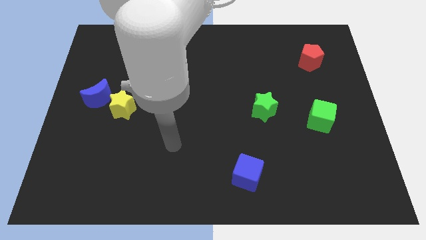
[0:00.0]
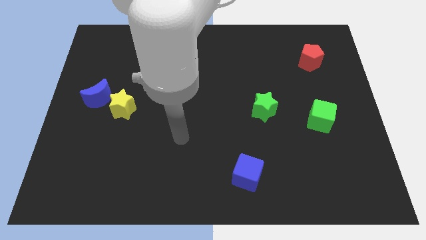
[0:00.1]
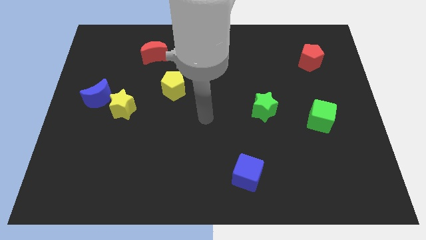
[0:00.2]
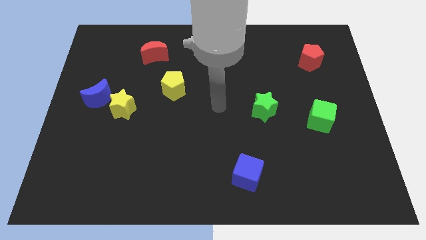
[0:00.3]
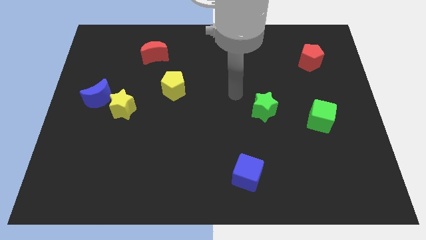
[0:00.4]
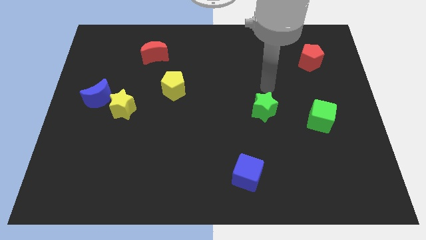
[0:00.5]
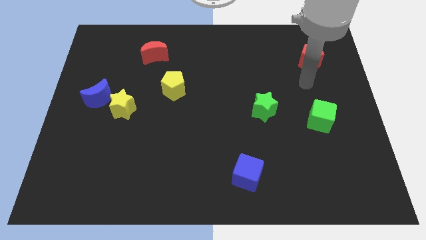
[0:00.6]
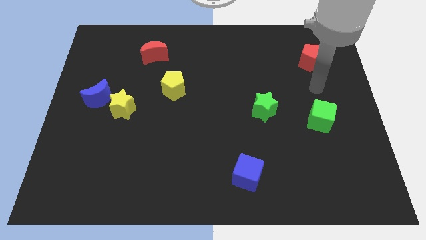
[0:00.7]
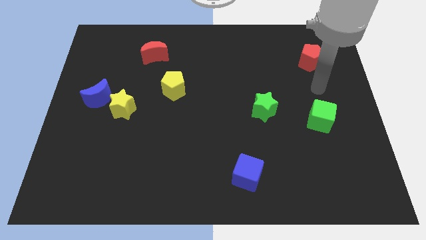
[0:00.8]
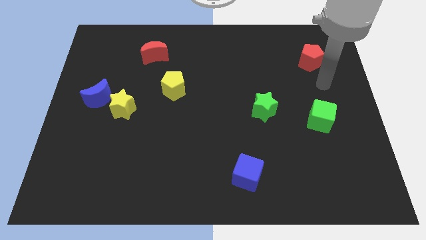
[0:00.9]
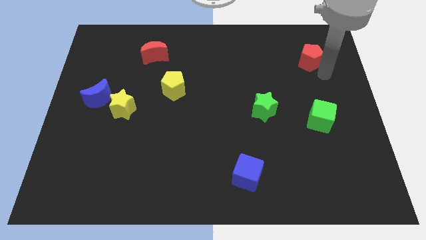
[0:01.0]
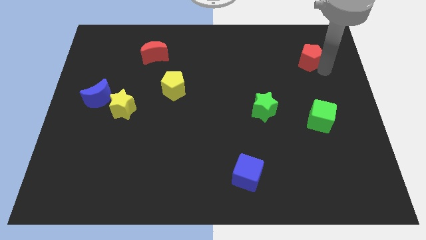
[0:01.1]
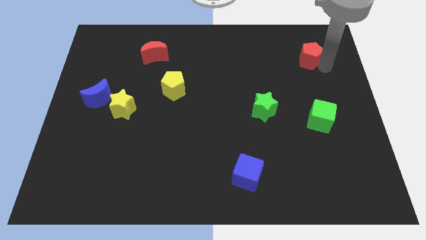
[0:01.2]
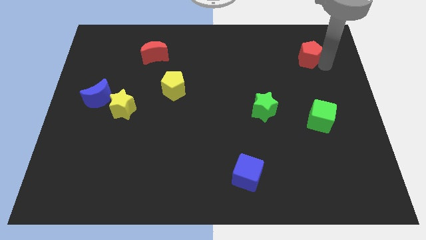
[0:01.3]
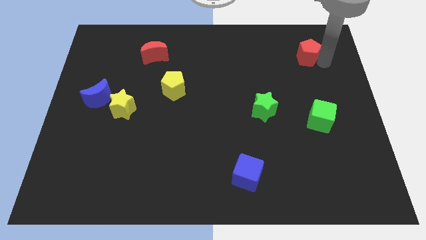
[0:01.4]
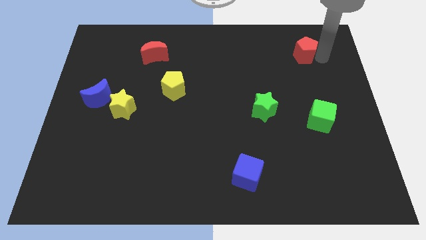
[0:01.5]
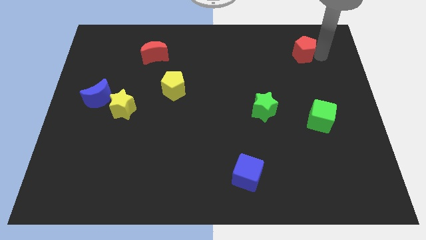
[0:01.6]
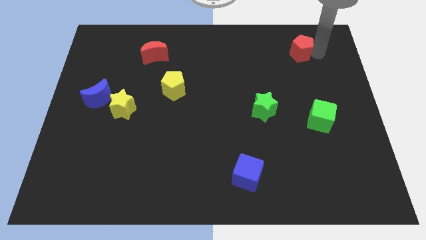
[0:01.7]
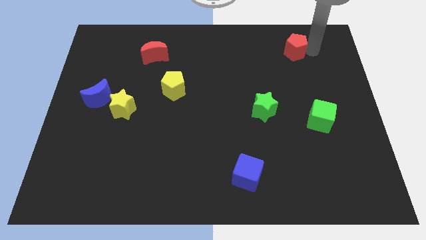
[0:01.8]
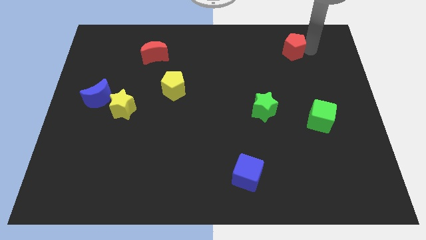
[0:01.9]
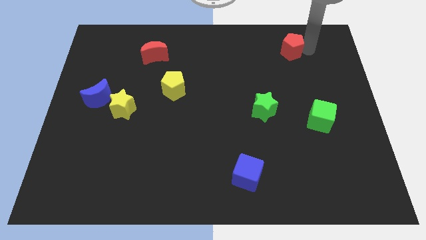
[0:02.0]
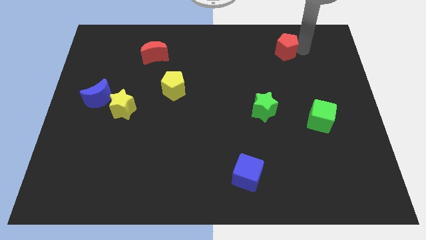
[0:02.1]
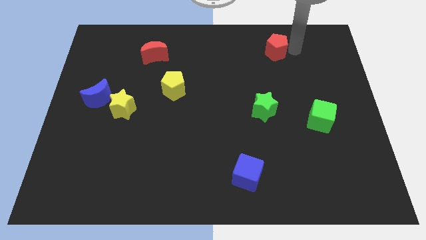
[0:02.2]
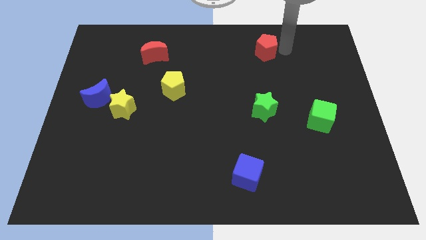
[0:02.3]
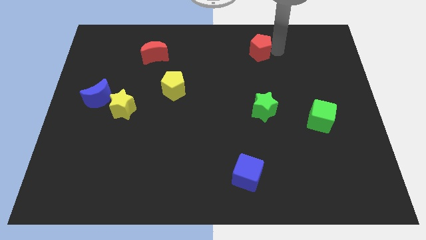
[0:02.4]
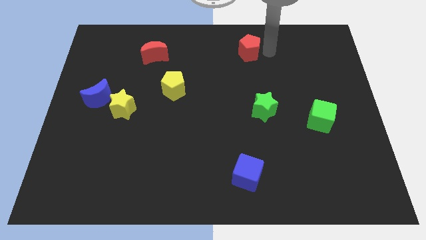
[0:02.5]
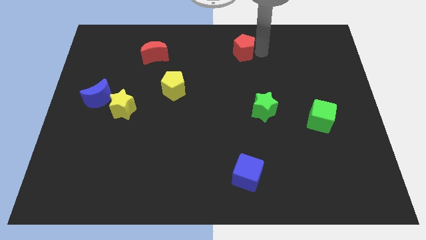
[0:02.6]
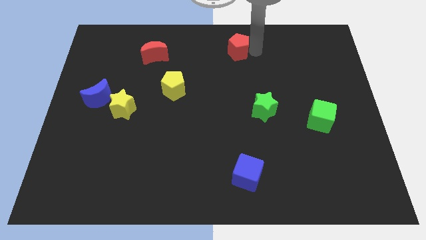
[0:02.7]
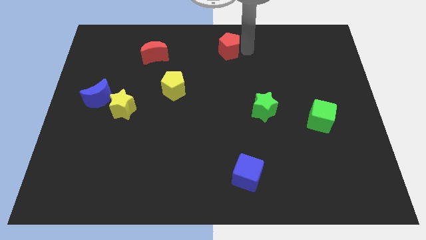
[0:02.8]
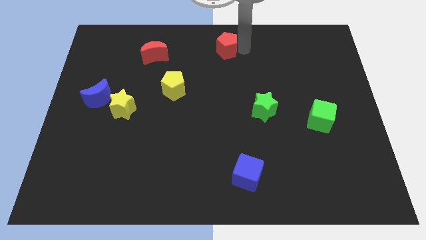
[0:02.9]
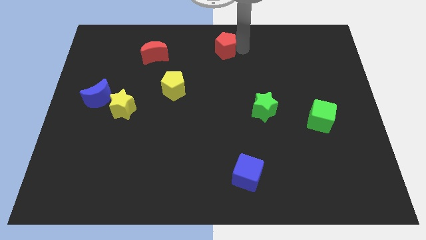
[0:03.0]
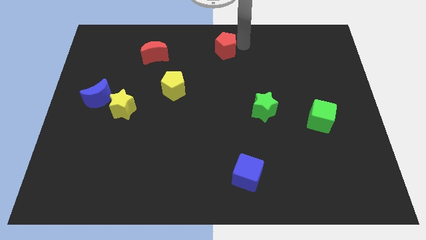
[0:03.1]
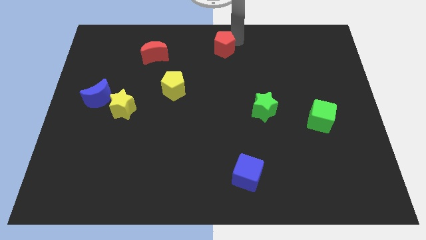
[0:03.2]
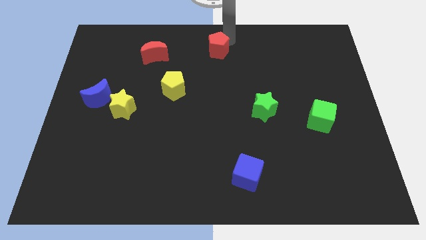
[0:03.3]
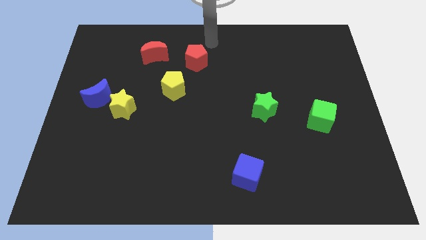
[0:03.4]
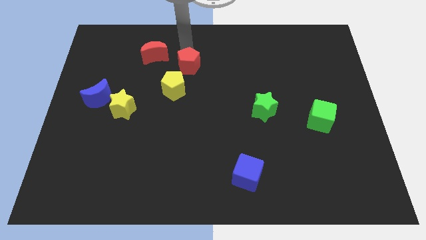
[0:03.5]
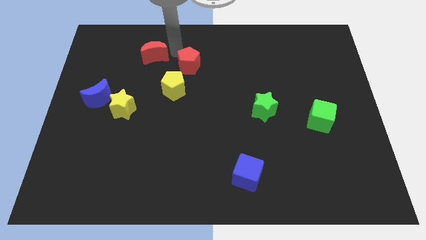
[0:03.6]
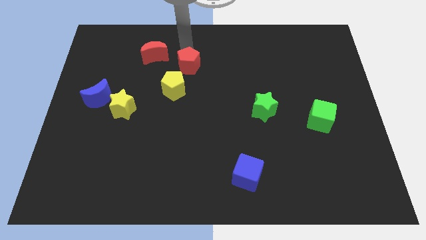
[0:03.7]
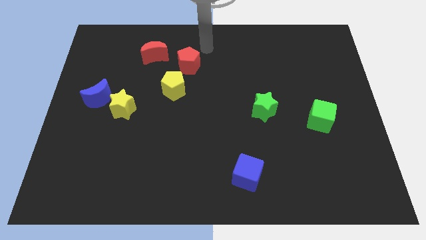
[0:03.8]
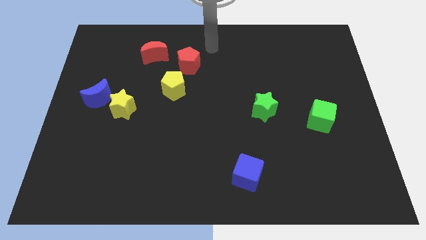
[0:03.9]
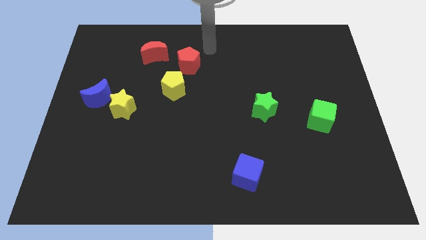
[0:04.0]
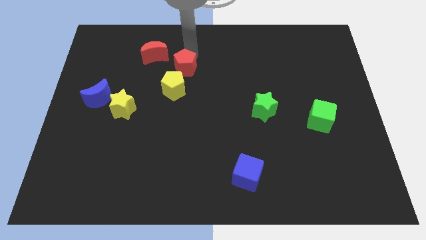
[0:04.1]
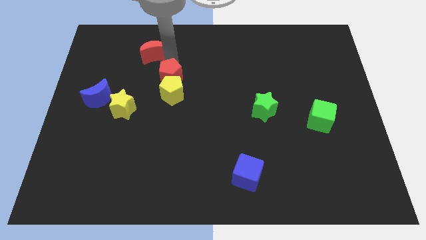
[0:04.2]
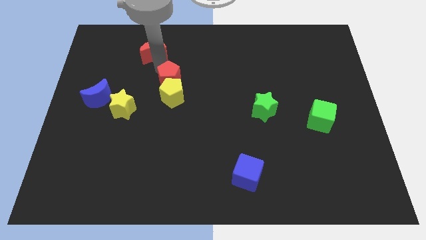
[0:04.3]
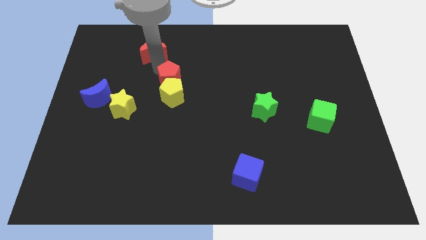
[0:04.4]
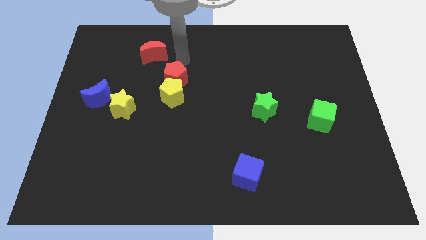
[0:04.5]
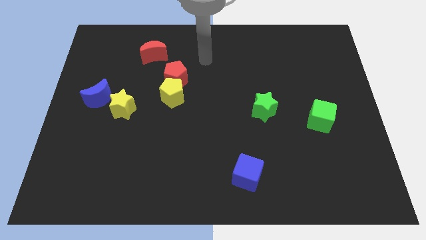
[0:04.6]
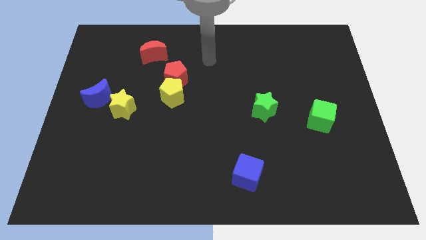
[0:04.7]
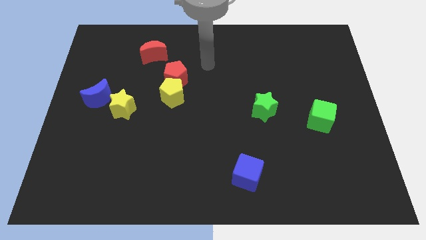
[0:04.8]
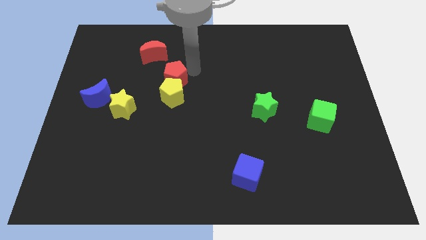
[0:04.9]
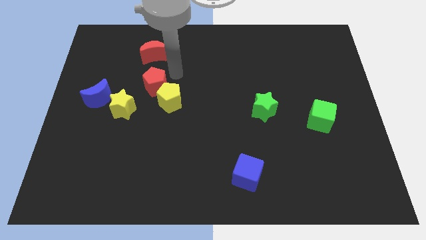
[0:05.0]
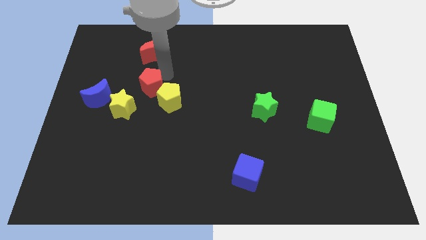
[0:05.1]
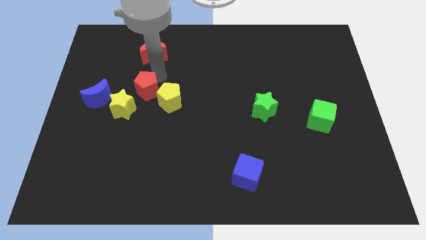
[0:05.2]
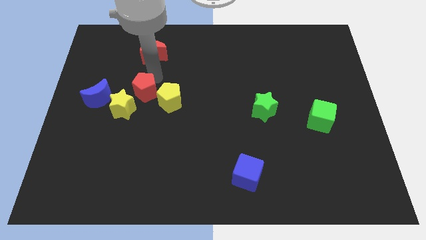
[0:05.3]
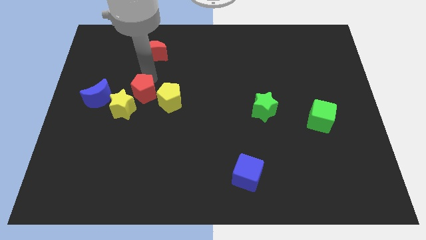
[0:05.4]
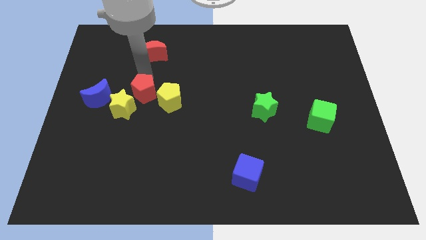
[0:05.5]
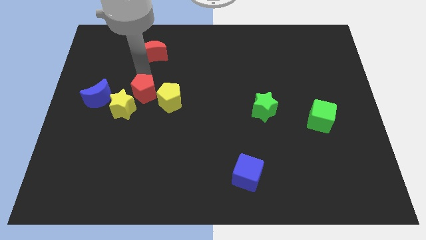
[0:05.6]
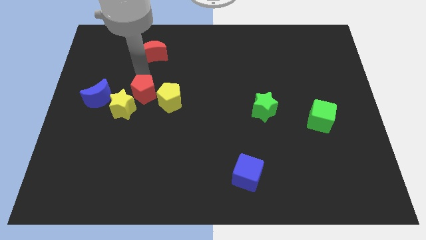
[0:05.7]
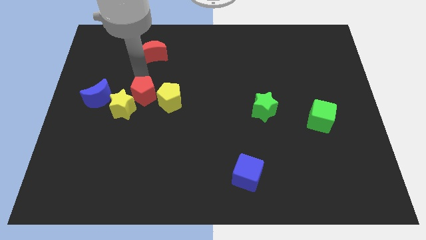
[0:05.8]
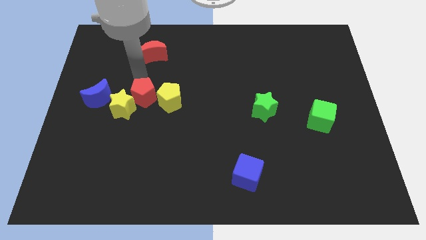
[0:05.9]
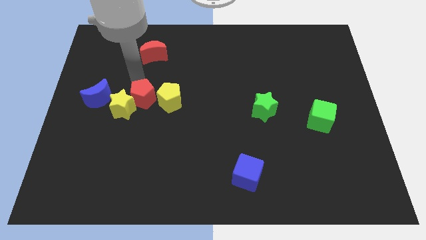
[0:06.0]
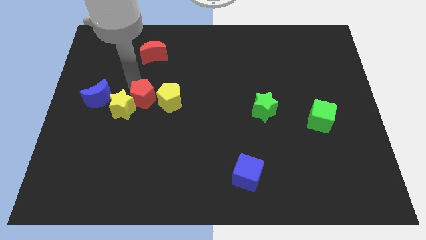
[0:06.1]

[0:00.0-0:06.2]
push the red pentagon next to the yellow star

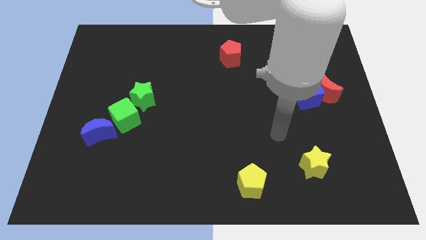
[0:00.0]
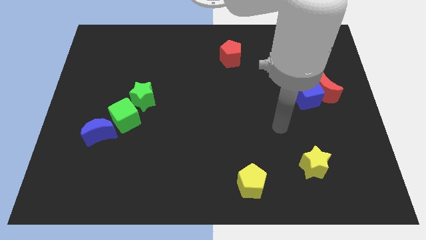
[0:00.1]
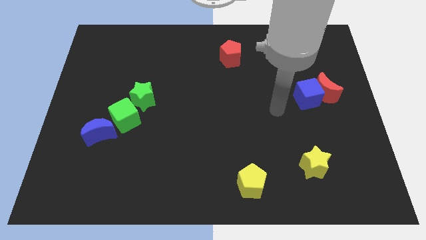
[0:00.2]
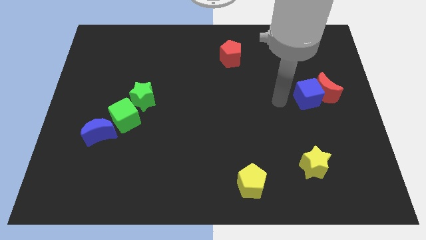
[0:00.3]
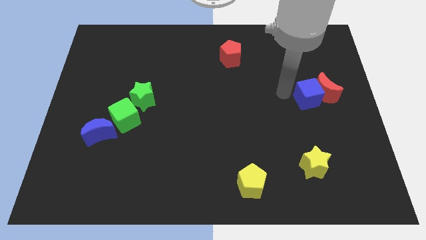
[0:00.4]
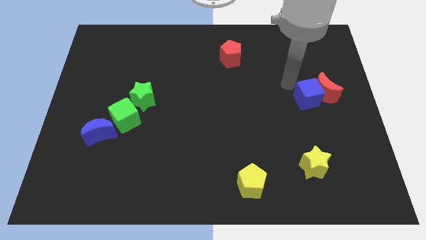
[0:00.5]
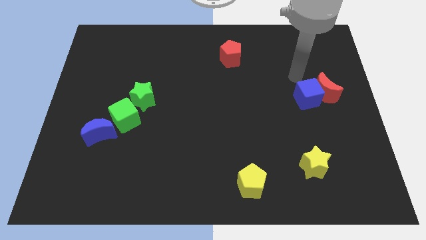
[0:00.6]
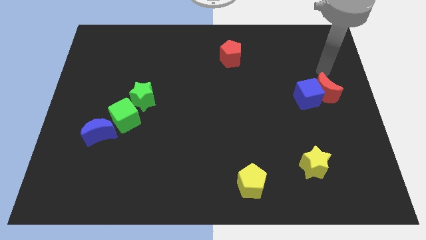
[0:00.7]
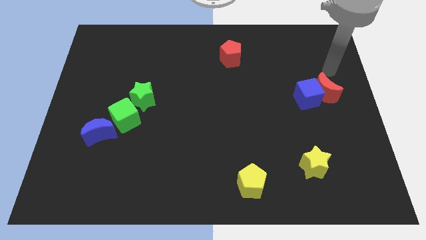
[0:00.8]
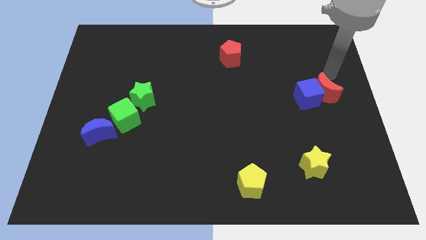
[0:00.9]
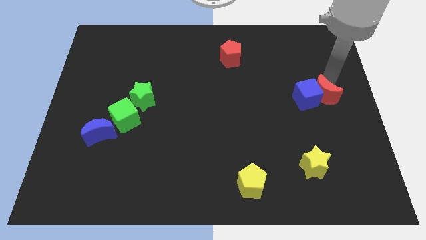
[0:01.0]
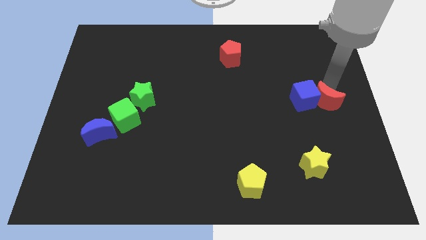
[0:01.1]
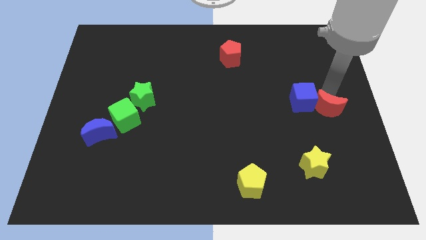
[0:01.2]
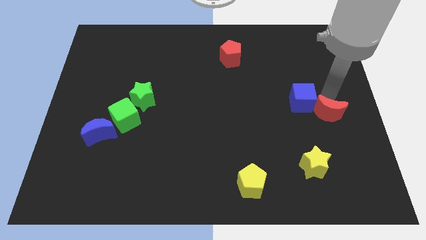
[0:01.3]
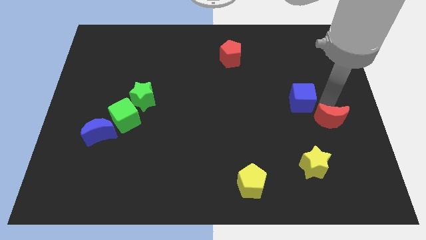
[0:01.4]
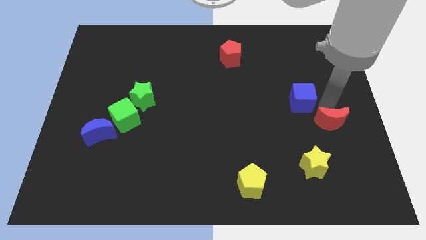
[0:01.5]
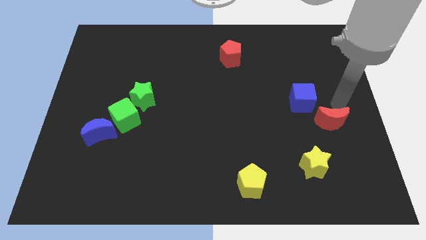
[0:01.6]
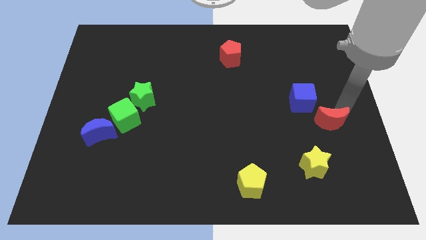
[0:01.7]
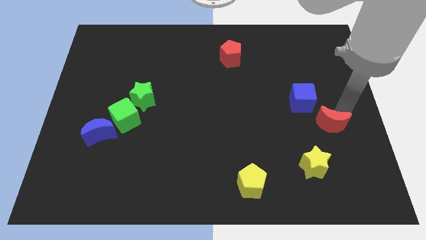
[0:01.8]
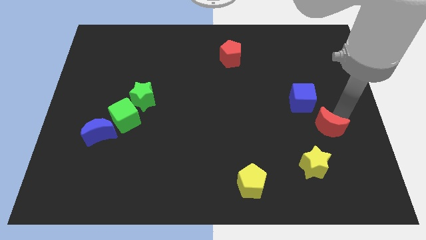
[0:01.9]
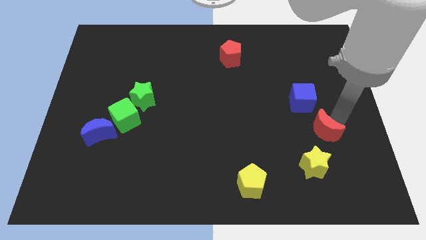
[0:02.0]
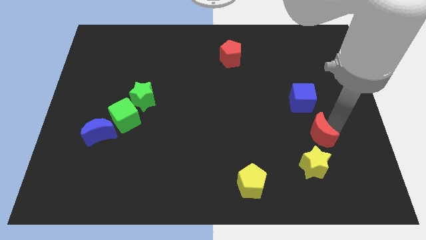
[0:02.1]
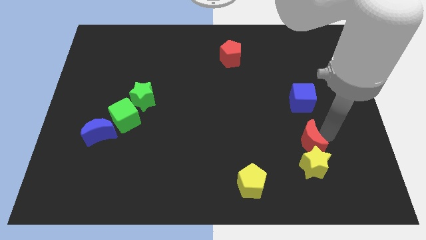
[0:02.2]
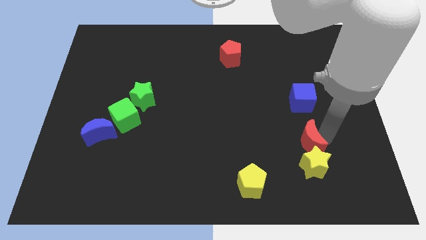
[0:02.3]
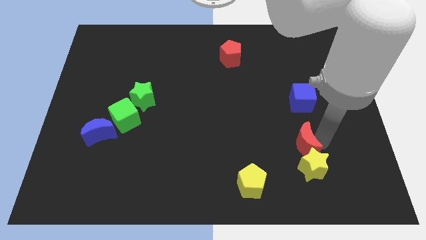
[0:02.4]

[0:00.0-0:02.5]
put the red moon towards the yellow star
